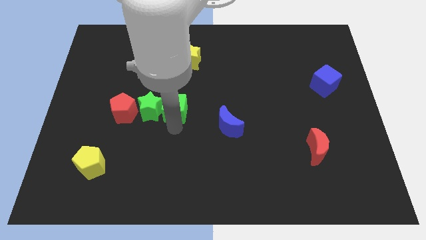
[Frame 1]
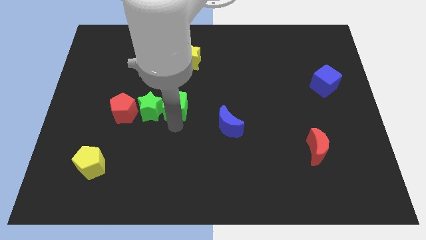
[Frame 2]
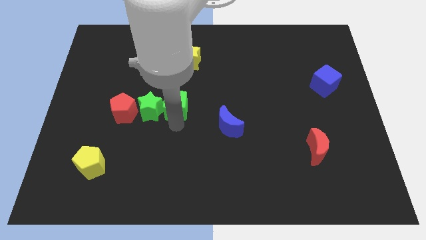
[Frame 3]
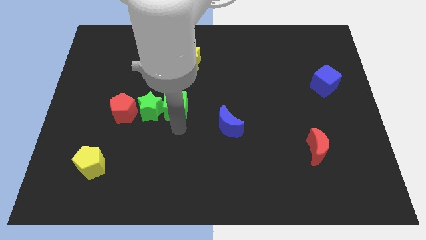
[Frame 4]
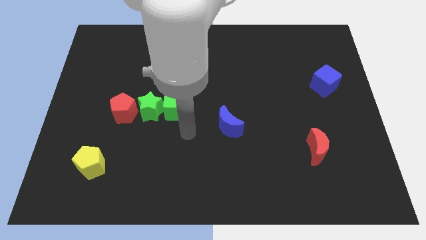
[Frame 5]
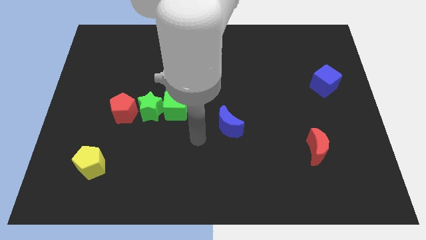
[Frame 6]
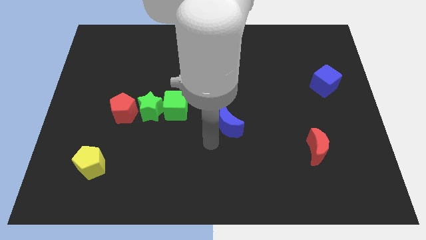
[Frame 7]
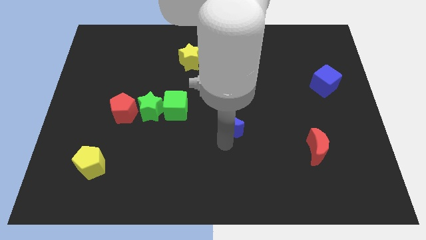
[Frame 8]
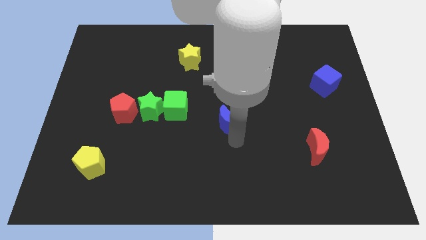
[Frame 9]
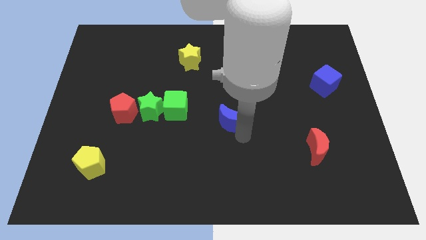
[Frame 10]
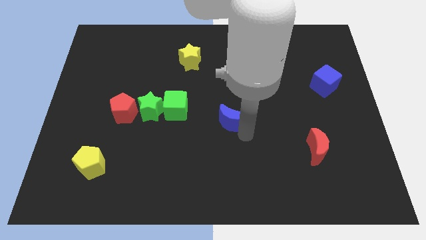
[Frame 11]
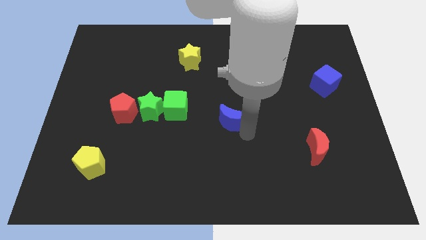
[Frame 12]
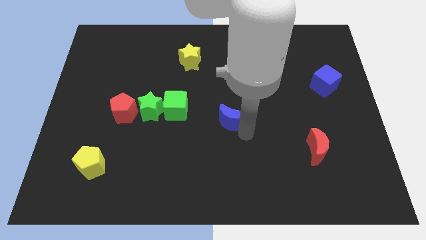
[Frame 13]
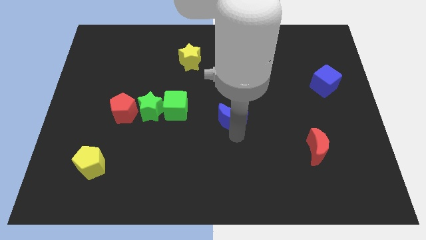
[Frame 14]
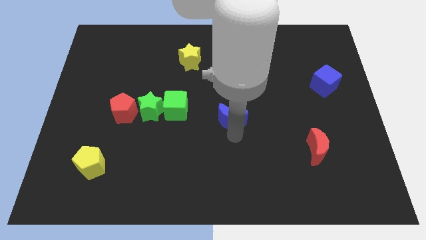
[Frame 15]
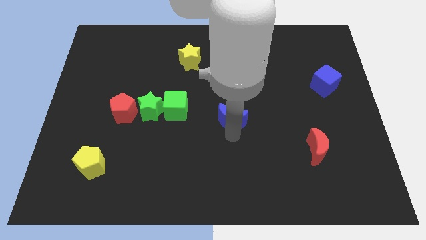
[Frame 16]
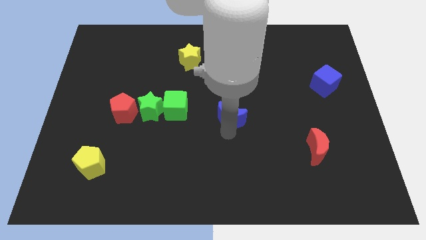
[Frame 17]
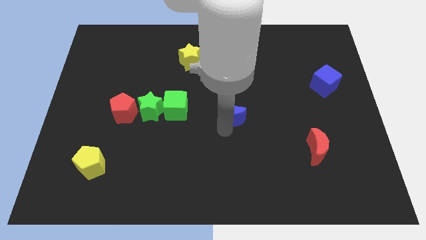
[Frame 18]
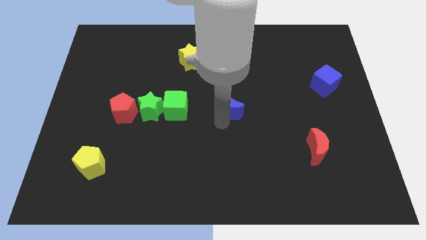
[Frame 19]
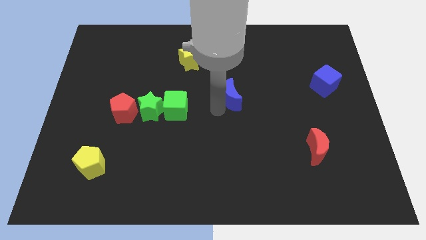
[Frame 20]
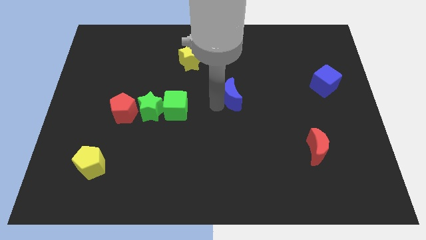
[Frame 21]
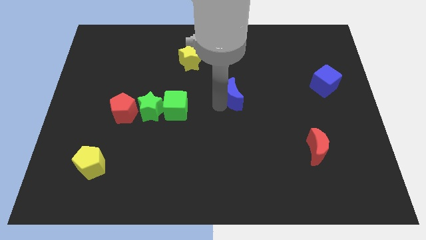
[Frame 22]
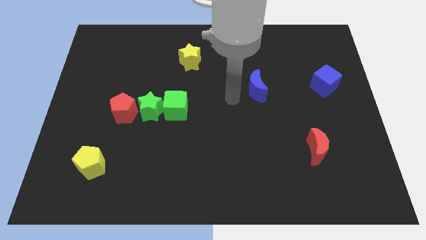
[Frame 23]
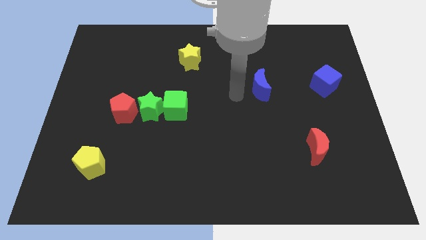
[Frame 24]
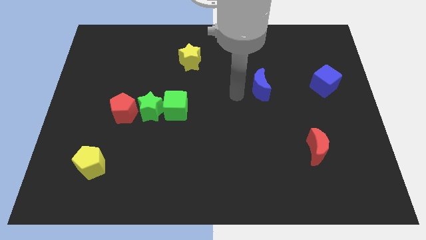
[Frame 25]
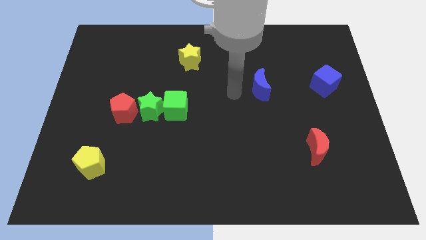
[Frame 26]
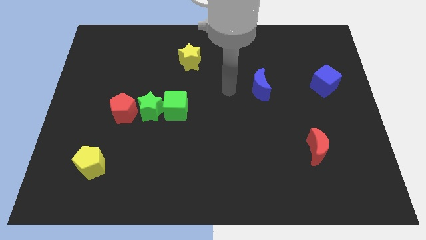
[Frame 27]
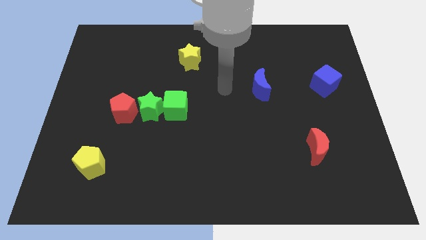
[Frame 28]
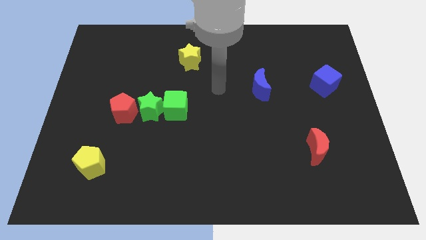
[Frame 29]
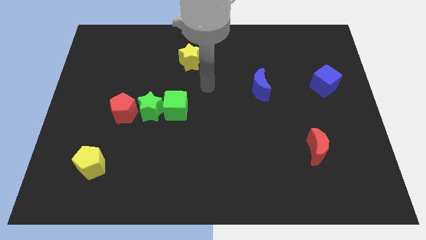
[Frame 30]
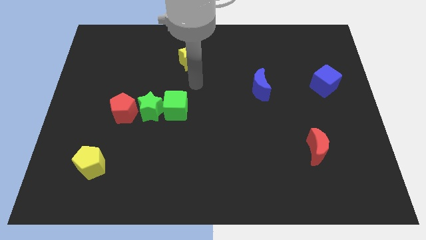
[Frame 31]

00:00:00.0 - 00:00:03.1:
move blue moon towards blue cube

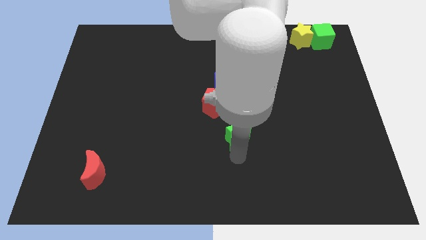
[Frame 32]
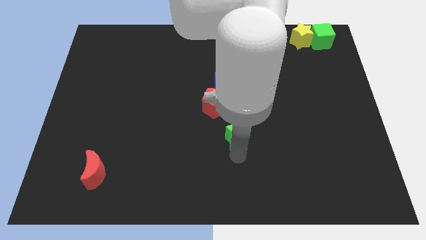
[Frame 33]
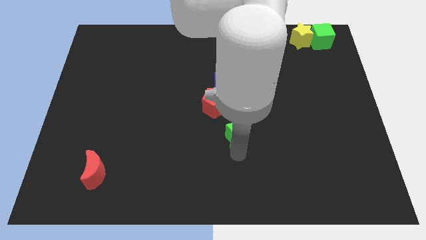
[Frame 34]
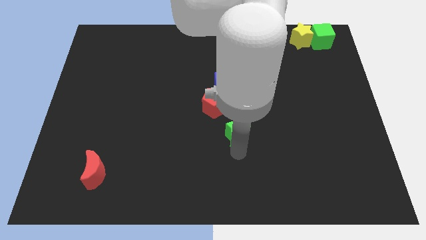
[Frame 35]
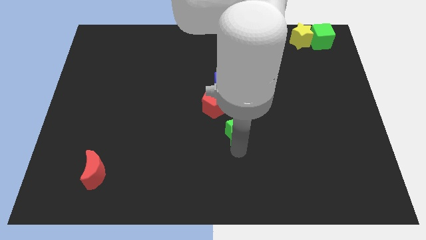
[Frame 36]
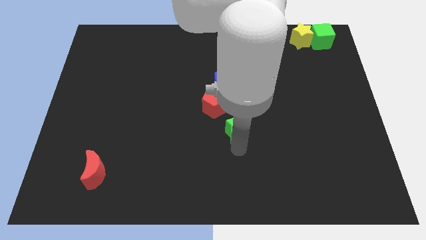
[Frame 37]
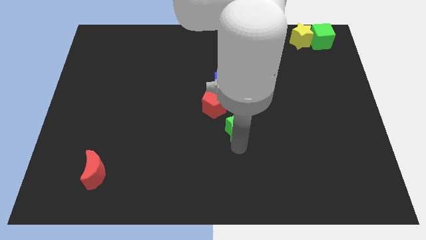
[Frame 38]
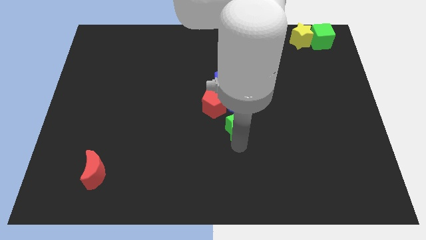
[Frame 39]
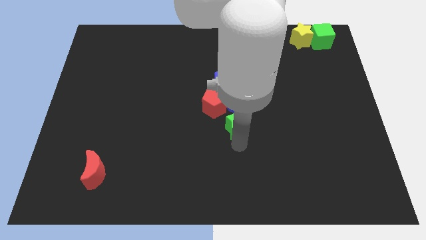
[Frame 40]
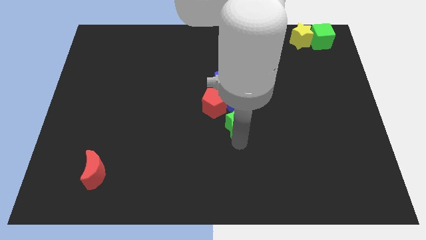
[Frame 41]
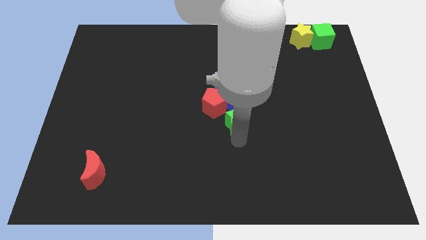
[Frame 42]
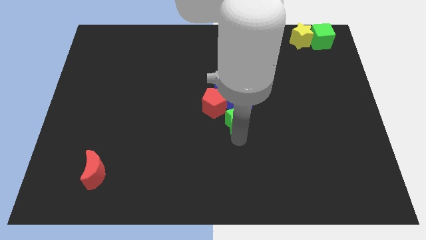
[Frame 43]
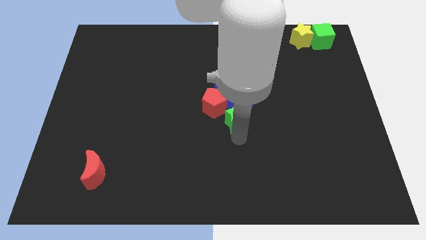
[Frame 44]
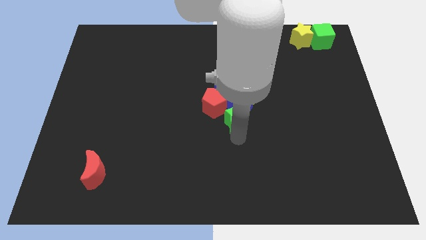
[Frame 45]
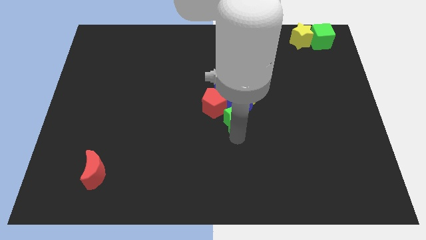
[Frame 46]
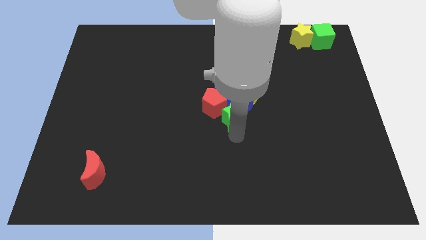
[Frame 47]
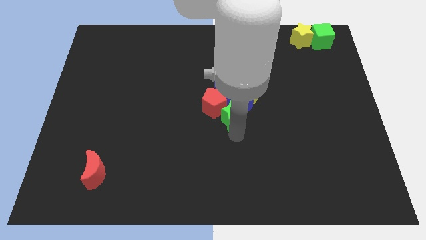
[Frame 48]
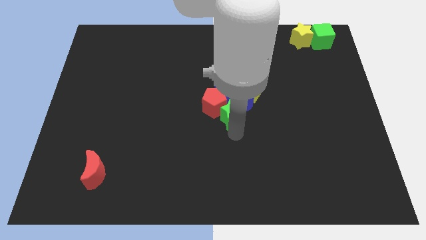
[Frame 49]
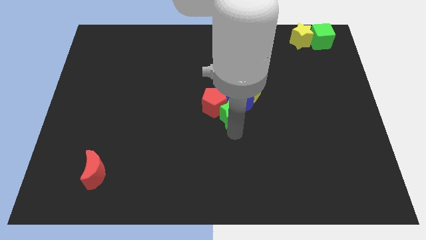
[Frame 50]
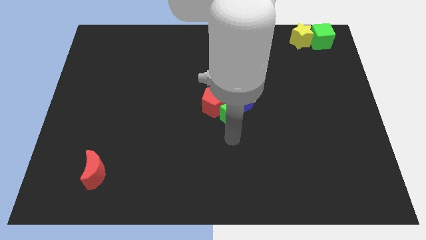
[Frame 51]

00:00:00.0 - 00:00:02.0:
add the green star to the group of blocks at the center of the board

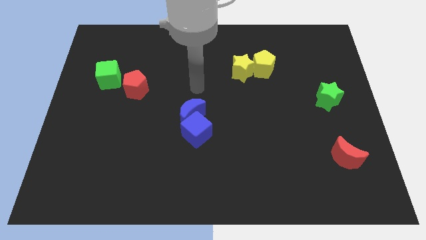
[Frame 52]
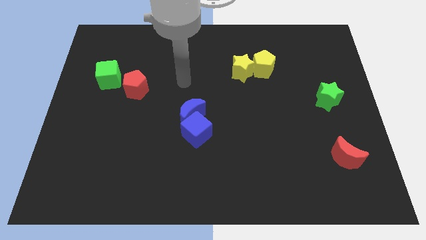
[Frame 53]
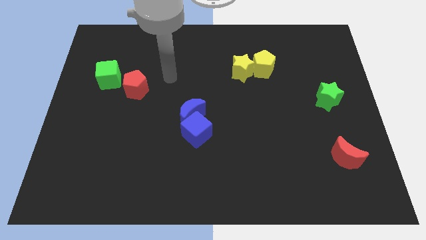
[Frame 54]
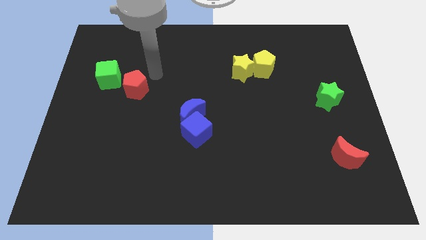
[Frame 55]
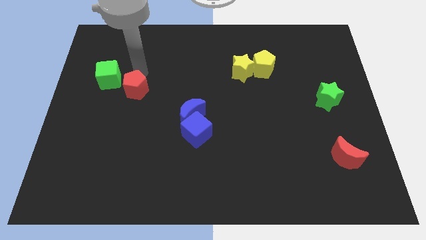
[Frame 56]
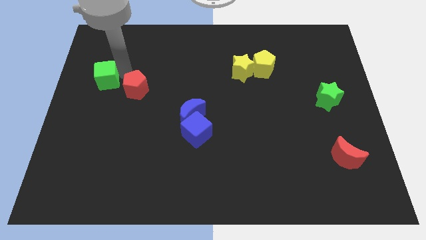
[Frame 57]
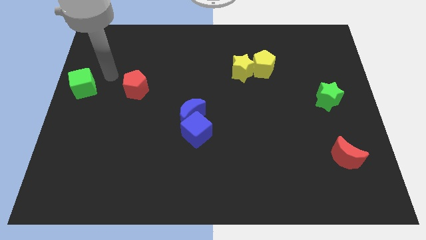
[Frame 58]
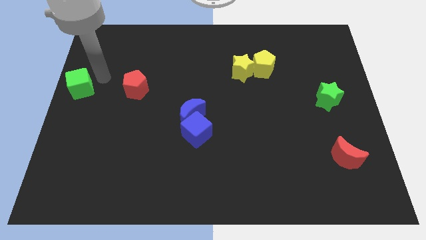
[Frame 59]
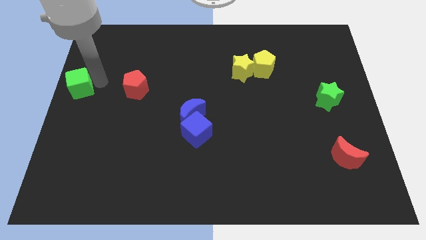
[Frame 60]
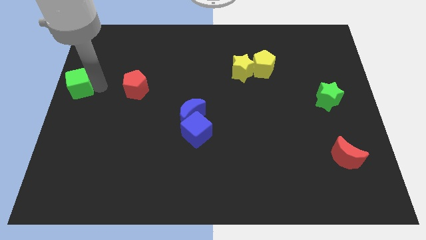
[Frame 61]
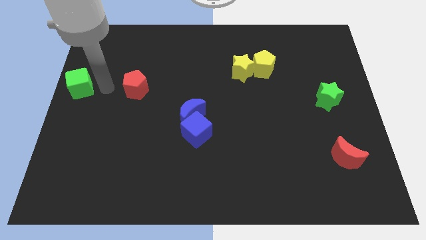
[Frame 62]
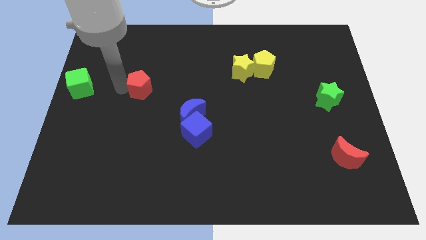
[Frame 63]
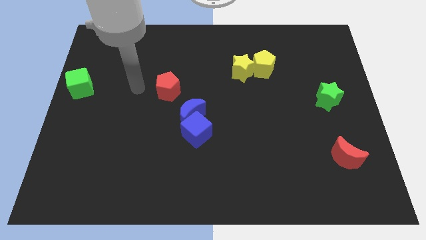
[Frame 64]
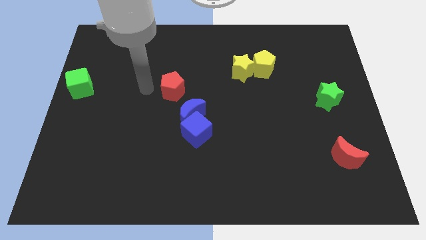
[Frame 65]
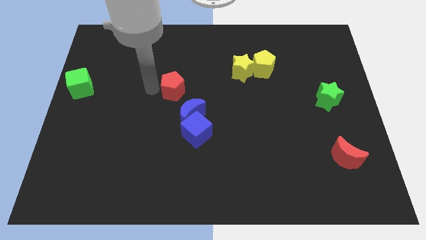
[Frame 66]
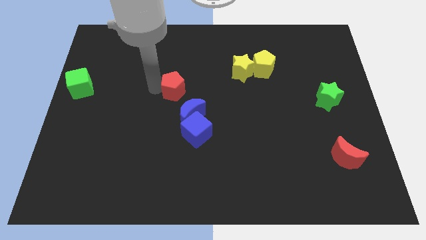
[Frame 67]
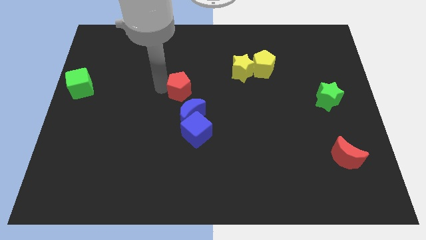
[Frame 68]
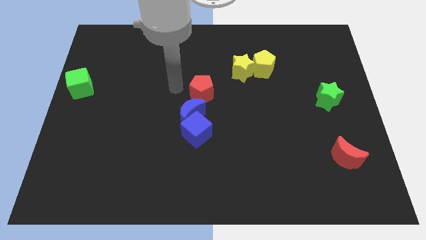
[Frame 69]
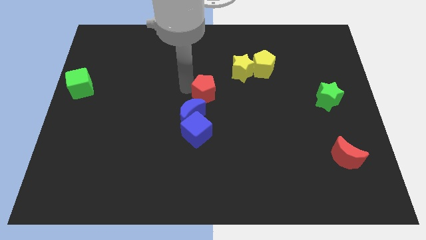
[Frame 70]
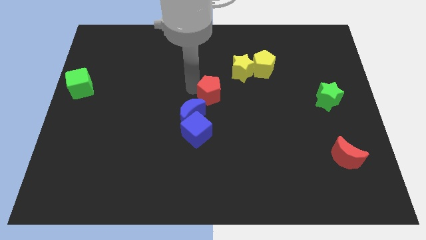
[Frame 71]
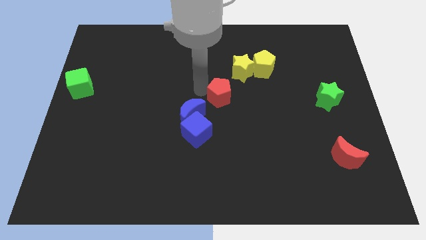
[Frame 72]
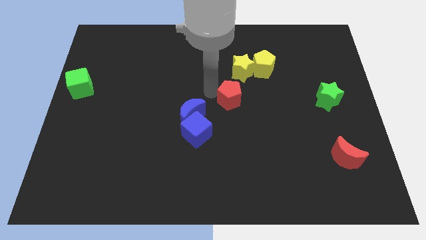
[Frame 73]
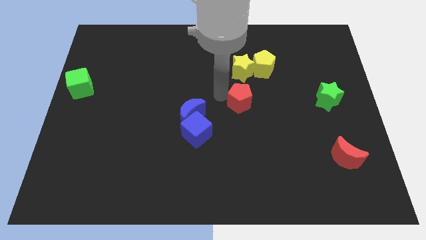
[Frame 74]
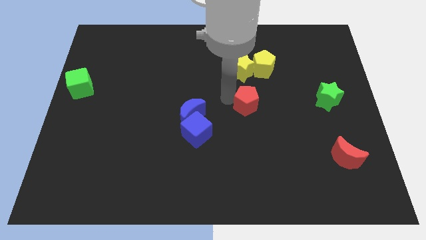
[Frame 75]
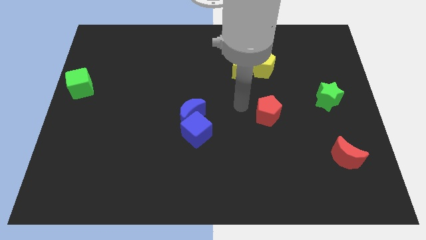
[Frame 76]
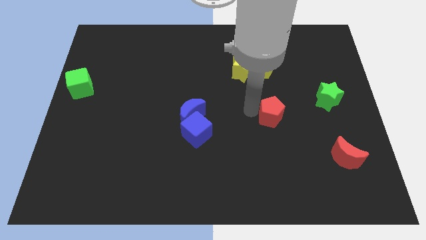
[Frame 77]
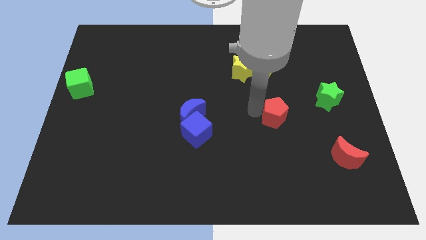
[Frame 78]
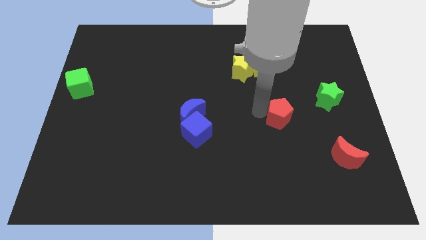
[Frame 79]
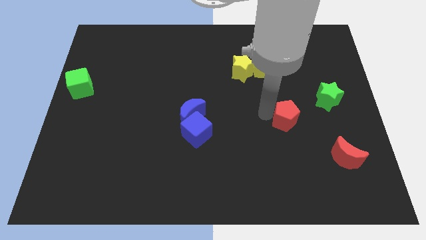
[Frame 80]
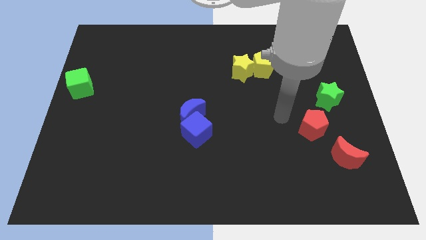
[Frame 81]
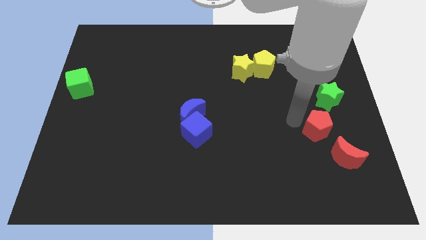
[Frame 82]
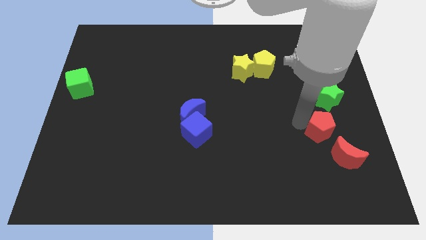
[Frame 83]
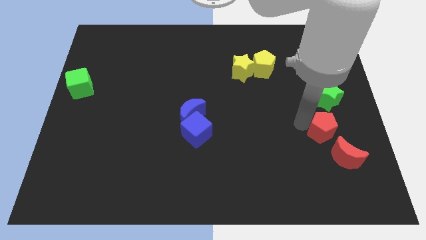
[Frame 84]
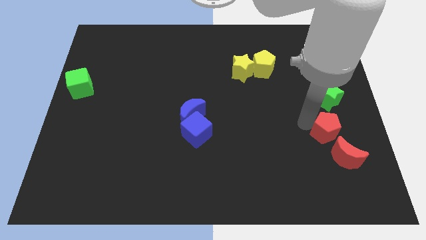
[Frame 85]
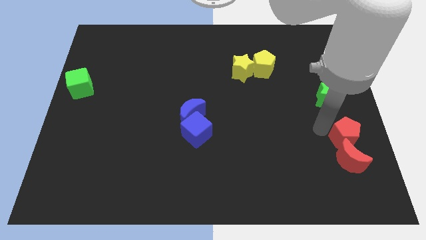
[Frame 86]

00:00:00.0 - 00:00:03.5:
drag the red pentagon into the red moon

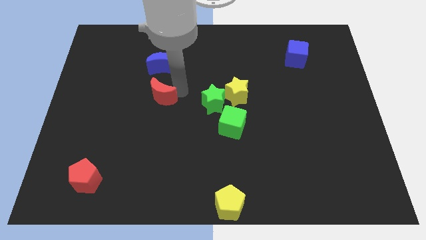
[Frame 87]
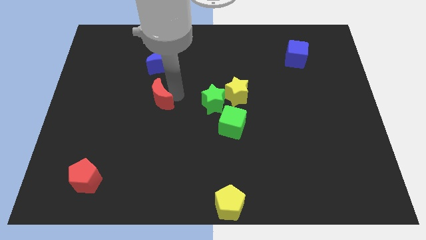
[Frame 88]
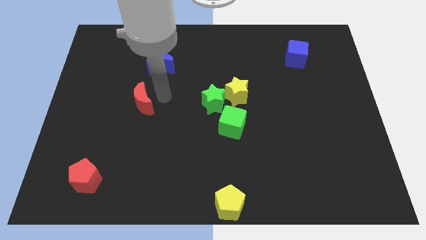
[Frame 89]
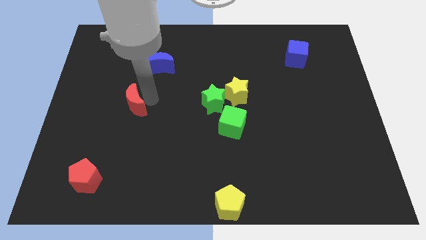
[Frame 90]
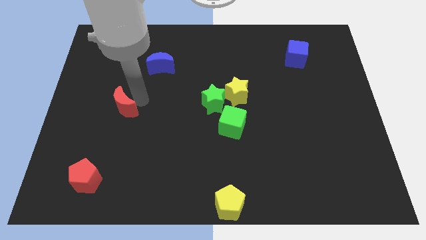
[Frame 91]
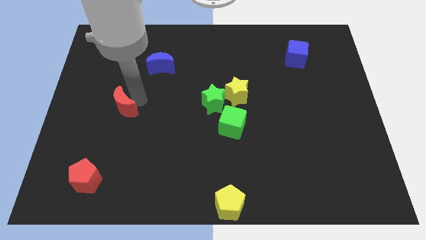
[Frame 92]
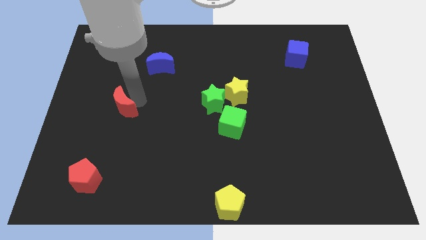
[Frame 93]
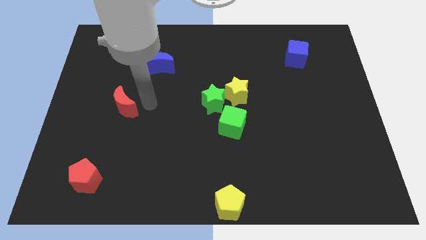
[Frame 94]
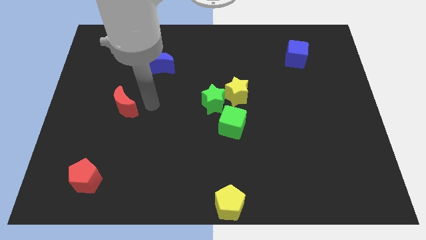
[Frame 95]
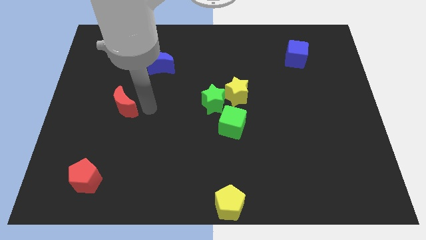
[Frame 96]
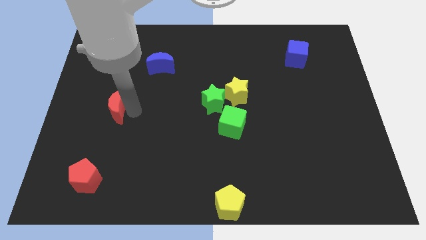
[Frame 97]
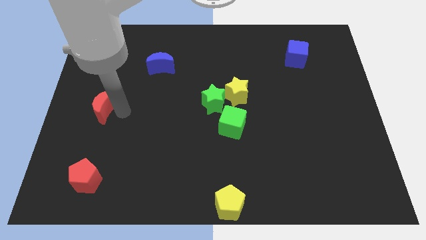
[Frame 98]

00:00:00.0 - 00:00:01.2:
place the red moon above the red pentagon
